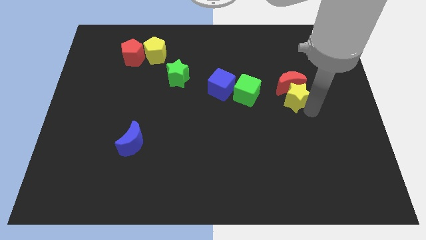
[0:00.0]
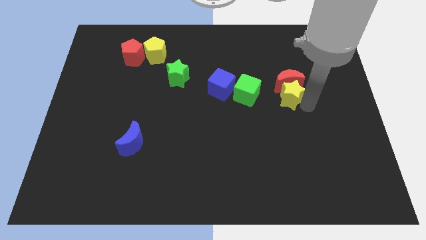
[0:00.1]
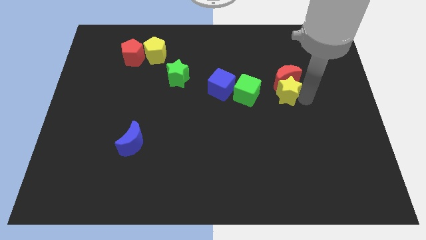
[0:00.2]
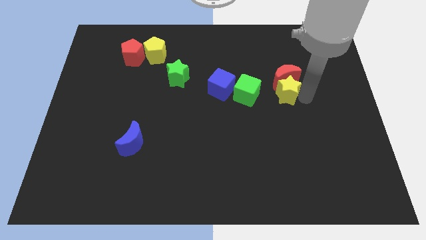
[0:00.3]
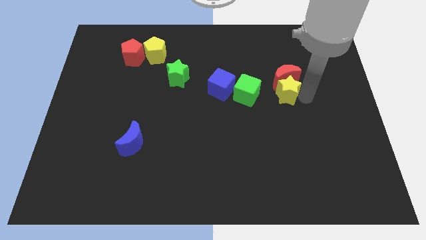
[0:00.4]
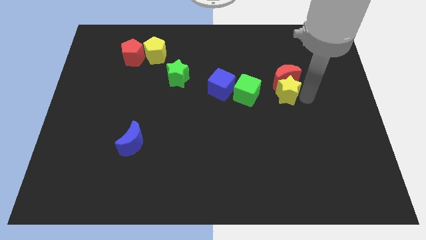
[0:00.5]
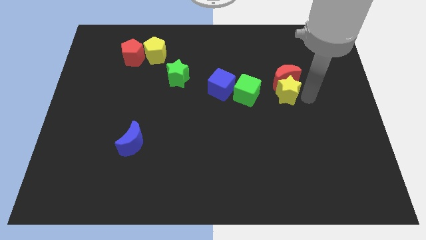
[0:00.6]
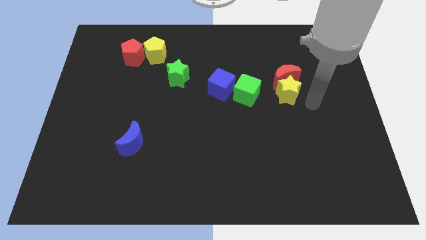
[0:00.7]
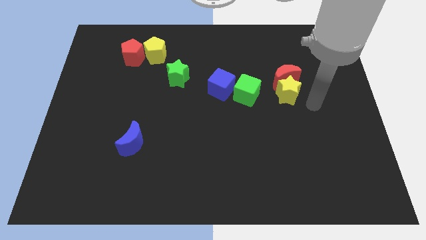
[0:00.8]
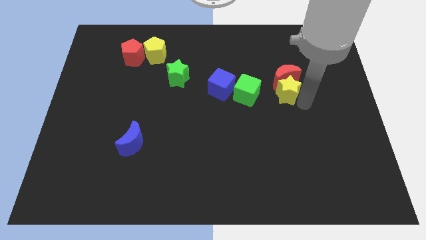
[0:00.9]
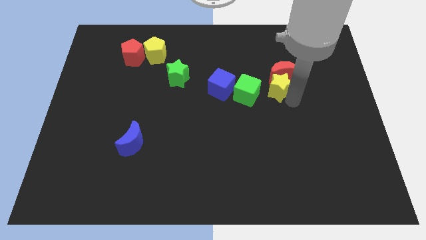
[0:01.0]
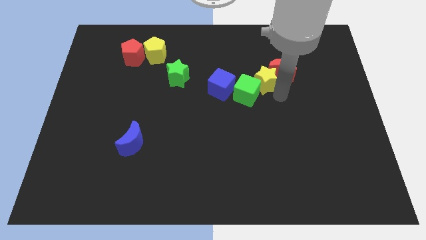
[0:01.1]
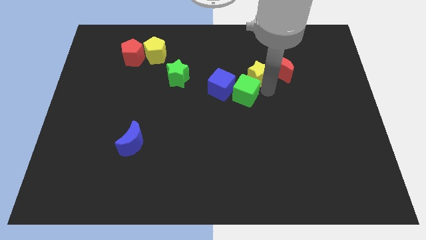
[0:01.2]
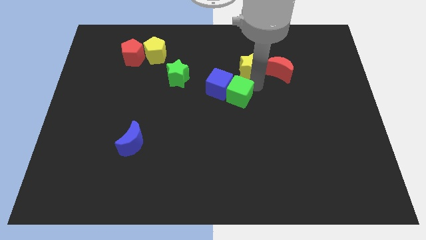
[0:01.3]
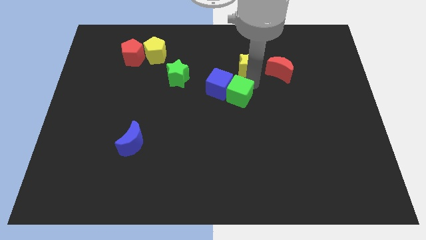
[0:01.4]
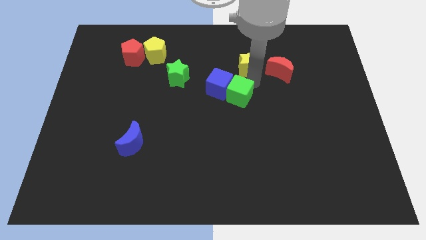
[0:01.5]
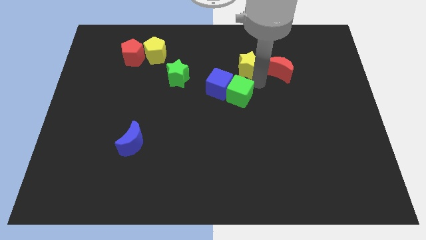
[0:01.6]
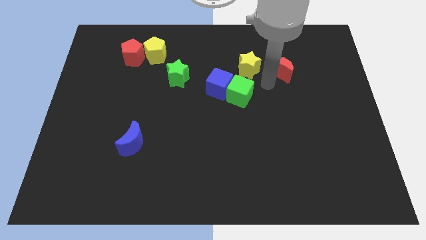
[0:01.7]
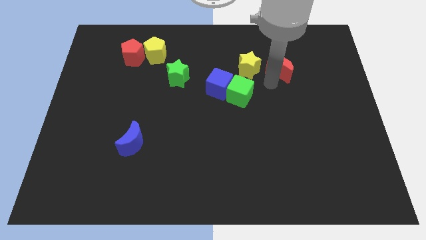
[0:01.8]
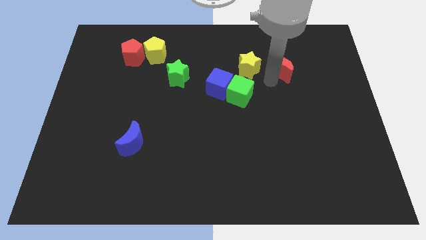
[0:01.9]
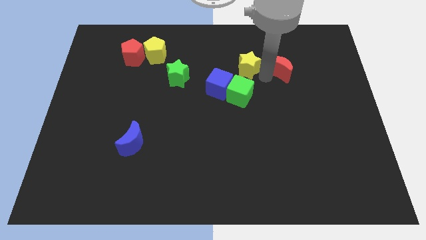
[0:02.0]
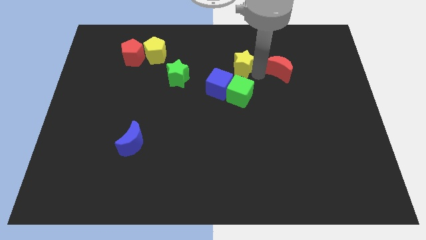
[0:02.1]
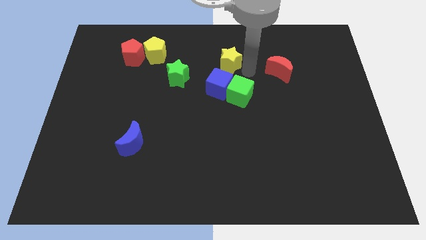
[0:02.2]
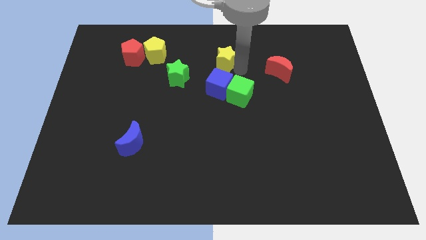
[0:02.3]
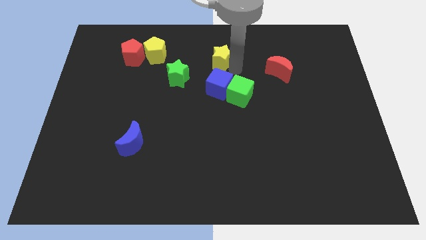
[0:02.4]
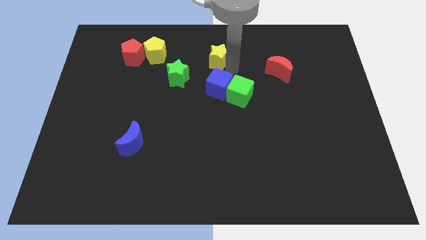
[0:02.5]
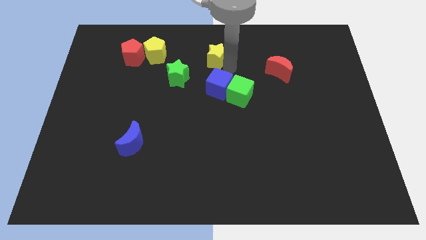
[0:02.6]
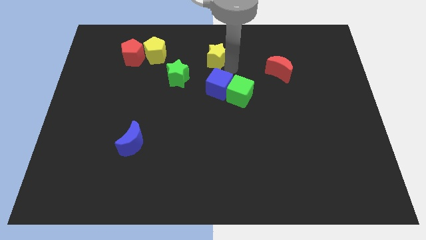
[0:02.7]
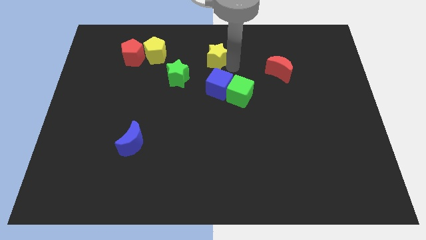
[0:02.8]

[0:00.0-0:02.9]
move the yellow star on top of blue cube

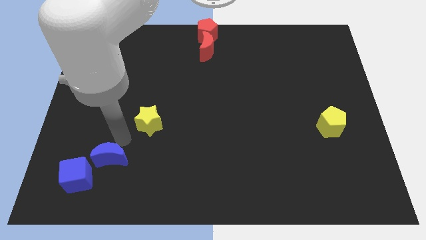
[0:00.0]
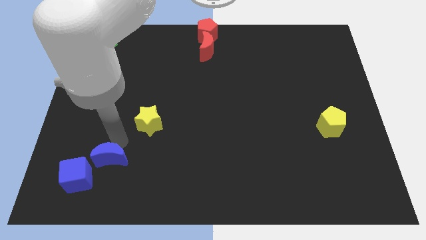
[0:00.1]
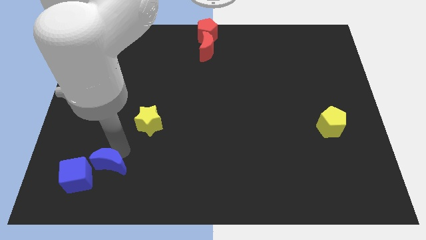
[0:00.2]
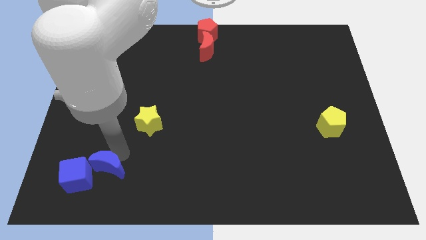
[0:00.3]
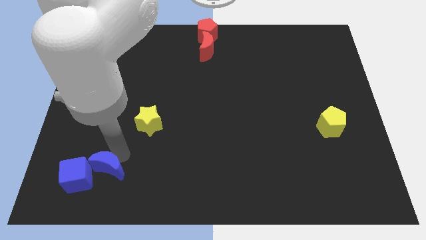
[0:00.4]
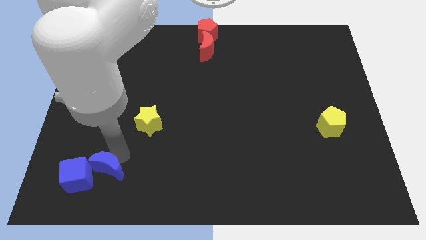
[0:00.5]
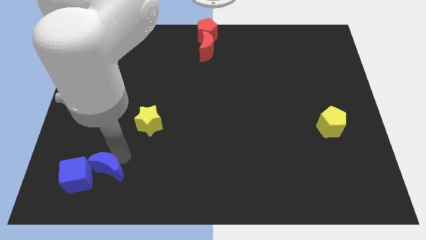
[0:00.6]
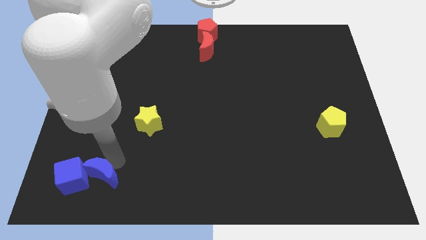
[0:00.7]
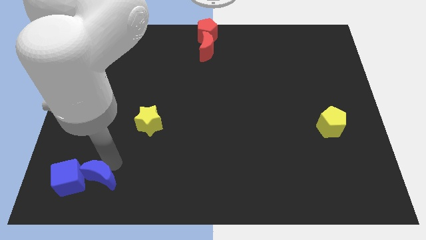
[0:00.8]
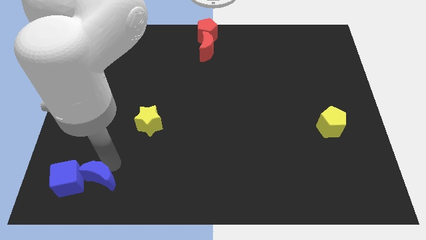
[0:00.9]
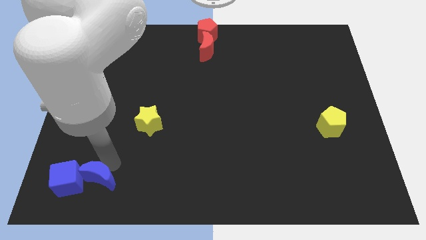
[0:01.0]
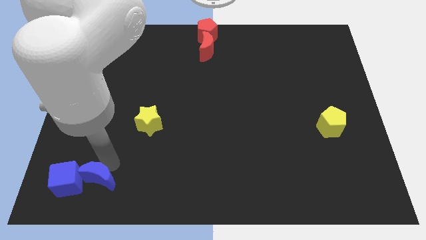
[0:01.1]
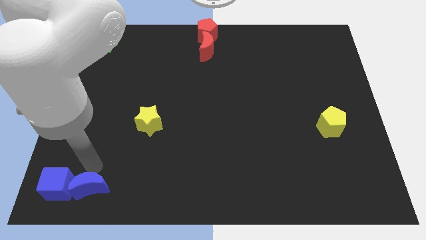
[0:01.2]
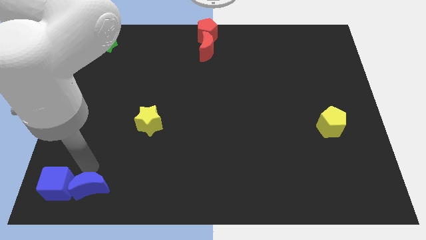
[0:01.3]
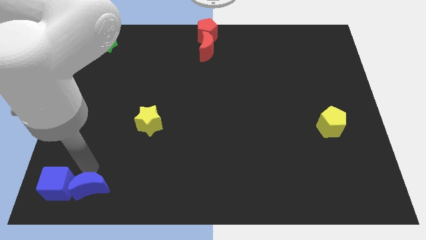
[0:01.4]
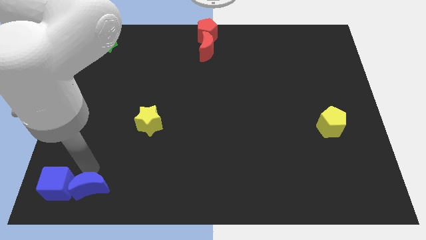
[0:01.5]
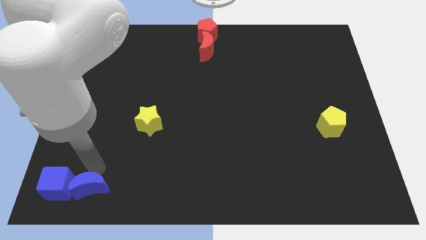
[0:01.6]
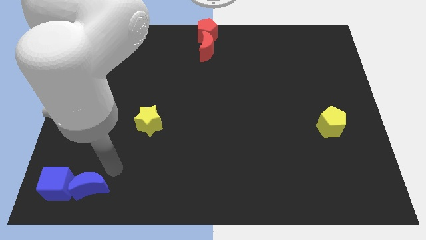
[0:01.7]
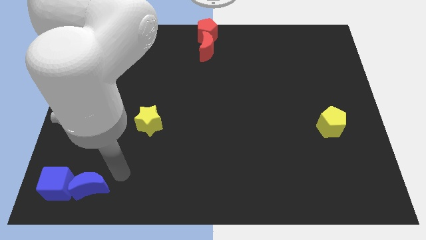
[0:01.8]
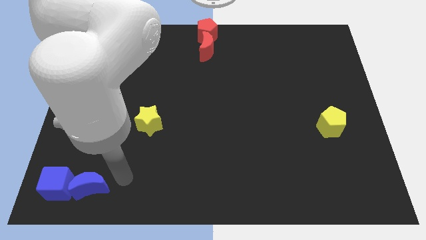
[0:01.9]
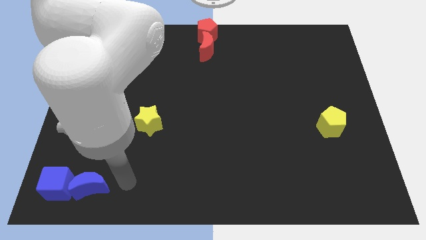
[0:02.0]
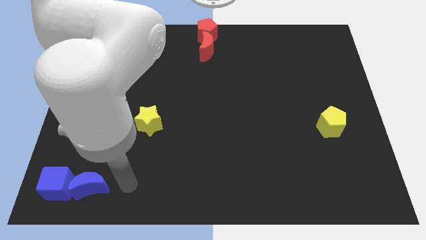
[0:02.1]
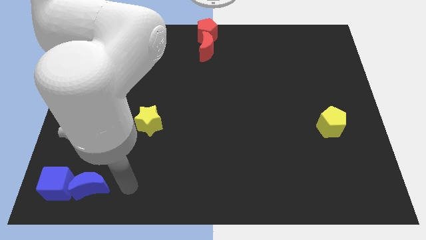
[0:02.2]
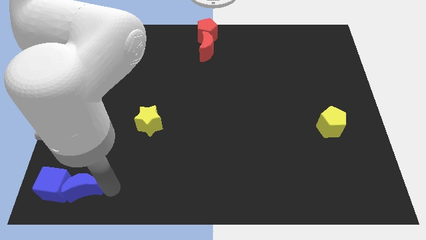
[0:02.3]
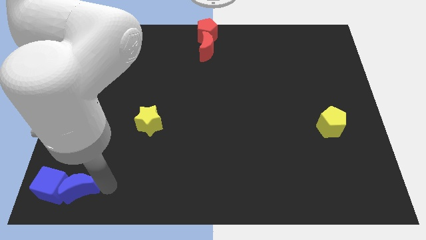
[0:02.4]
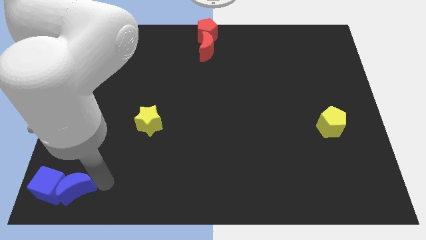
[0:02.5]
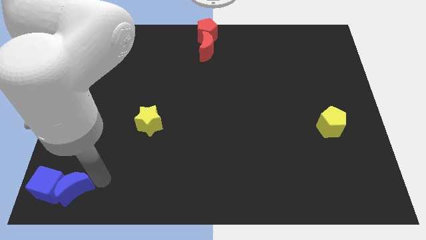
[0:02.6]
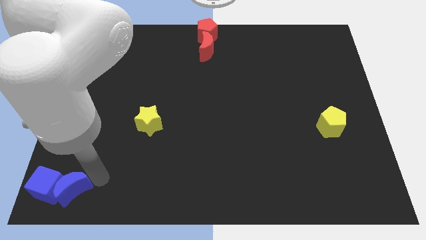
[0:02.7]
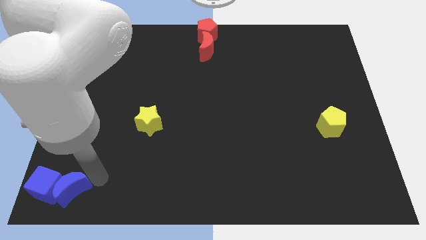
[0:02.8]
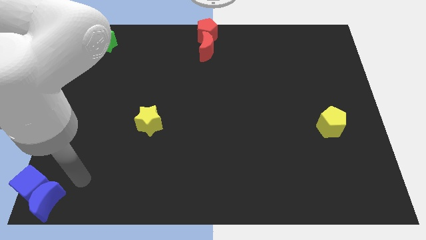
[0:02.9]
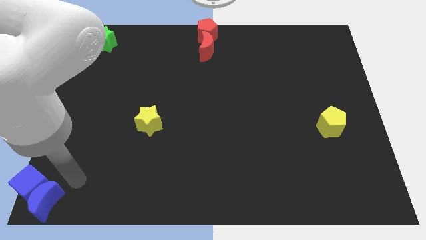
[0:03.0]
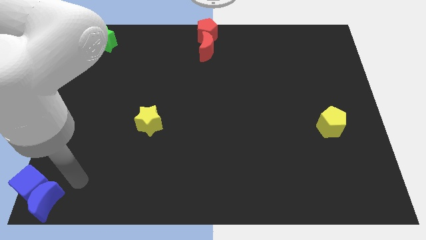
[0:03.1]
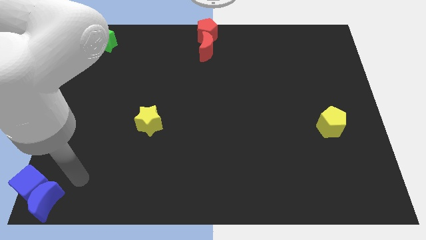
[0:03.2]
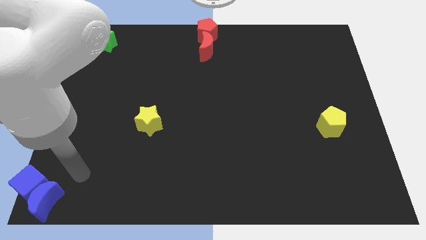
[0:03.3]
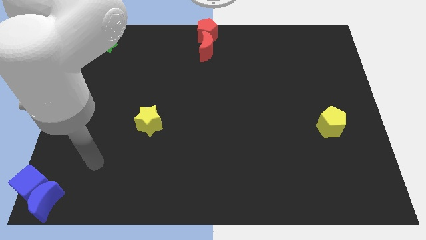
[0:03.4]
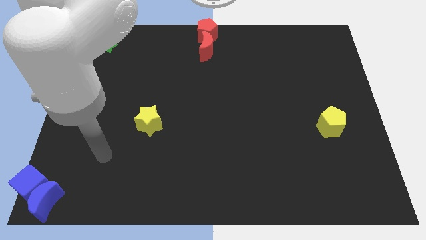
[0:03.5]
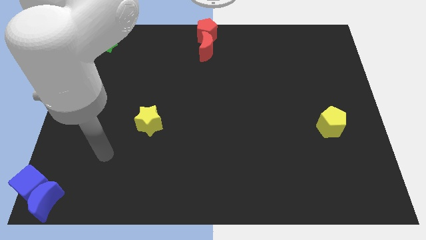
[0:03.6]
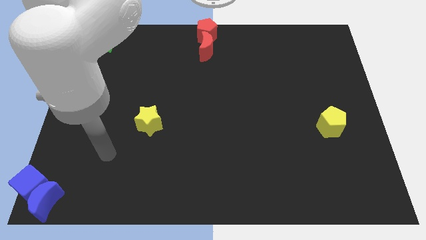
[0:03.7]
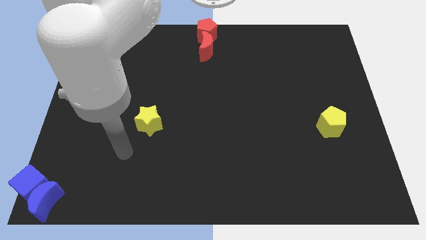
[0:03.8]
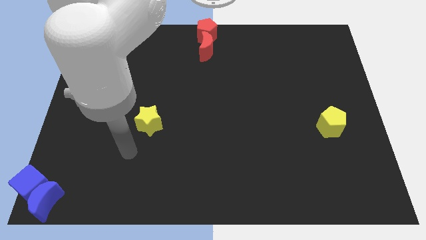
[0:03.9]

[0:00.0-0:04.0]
move the blue blocks to the bottom left corner of the board

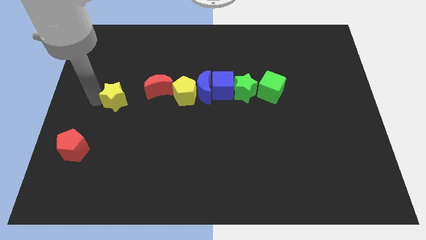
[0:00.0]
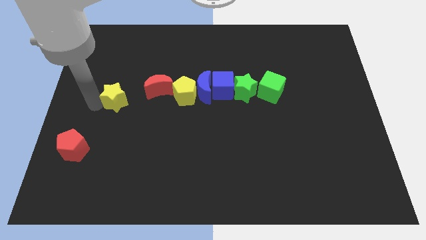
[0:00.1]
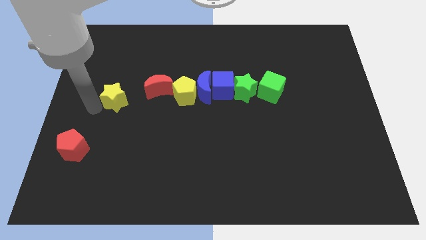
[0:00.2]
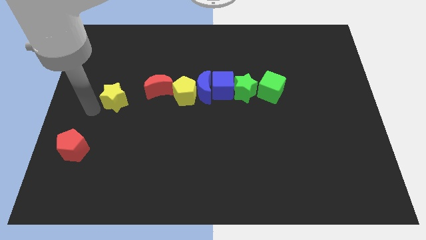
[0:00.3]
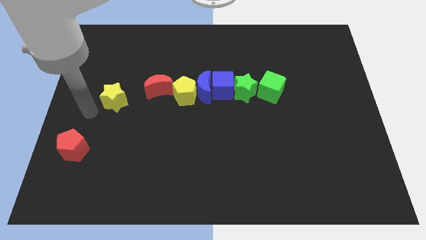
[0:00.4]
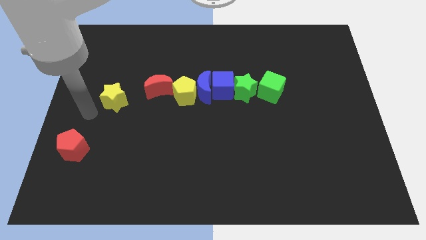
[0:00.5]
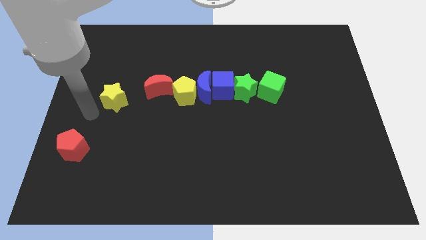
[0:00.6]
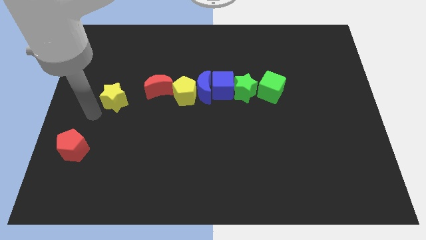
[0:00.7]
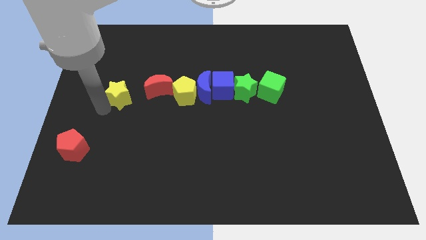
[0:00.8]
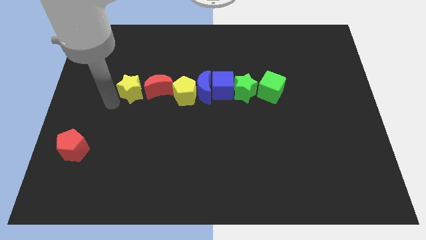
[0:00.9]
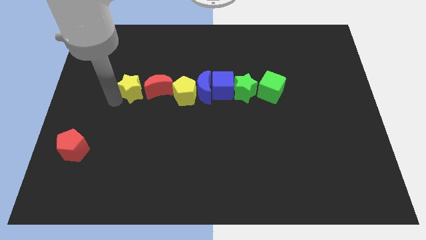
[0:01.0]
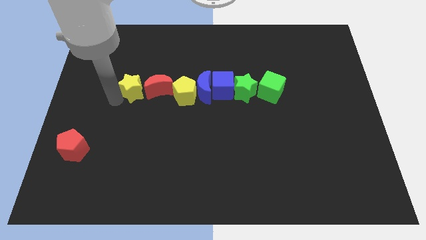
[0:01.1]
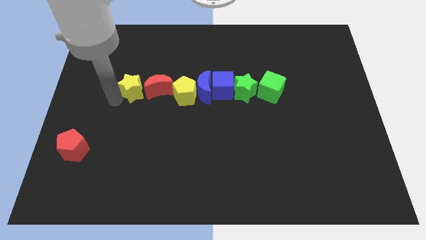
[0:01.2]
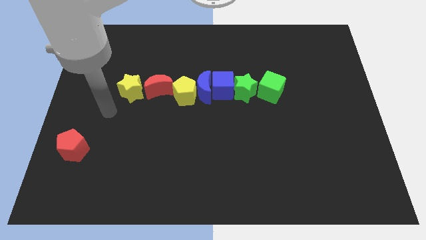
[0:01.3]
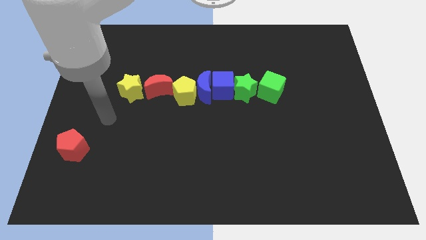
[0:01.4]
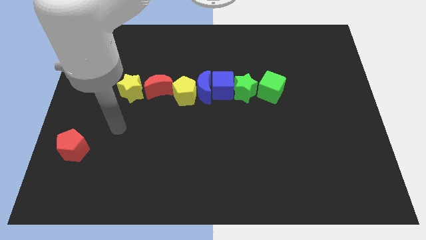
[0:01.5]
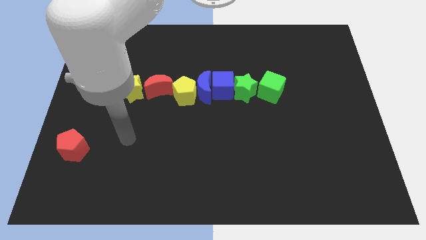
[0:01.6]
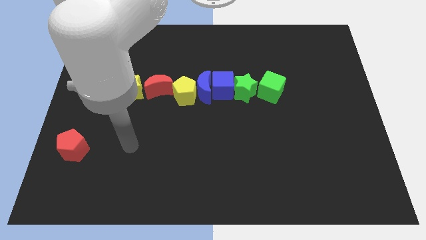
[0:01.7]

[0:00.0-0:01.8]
place the yellow star to the left of the red crescent

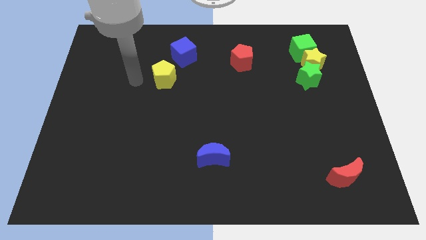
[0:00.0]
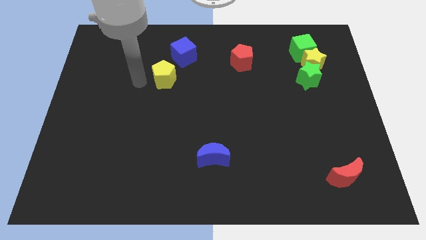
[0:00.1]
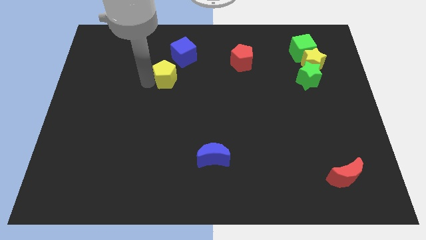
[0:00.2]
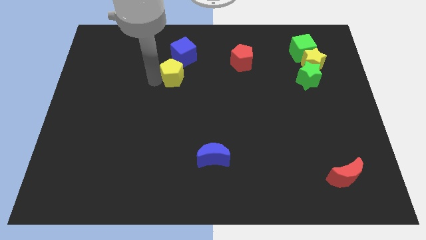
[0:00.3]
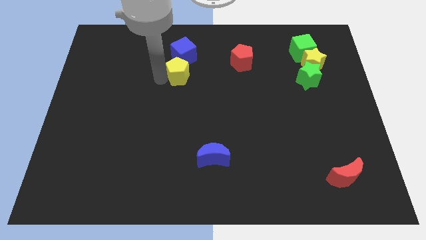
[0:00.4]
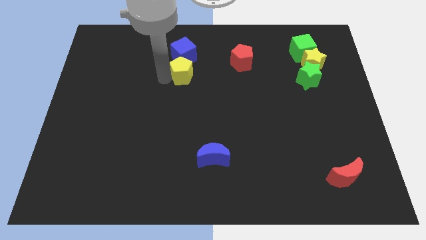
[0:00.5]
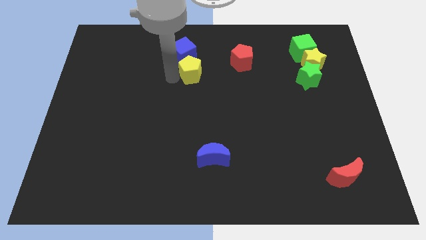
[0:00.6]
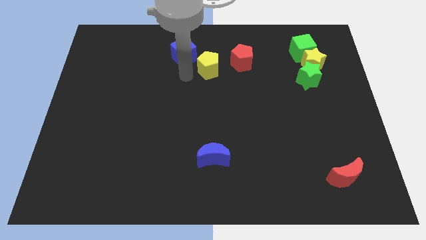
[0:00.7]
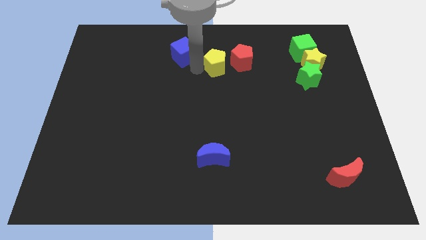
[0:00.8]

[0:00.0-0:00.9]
push the yellow pentagon to the left of the red pentagon
